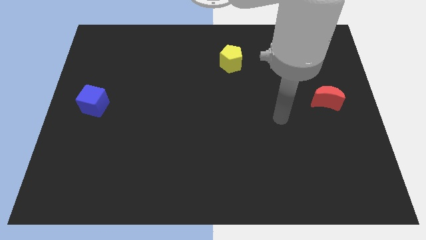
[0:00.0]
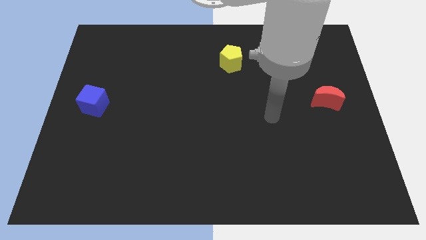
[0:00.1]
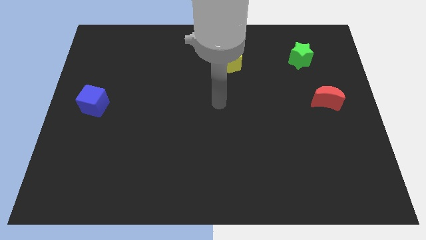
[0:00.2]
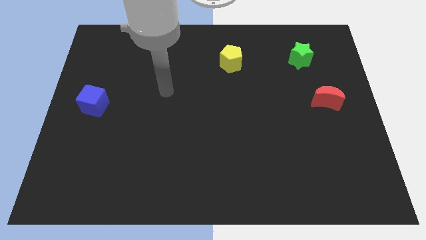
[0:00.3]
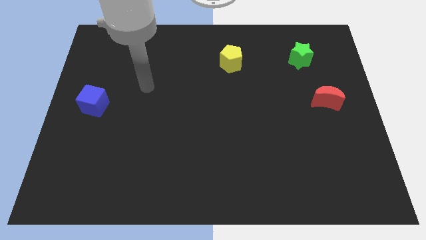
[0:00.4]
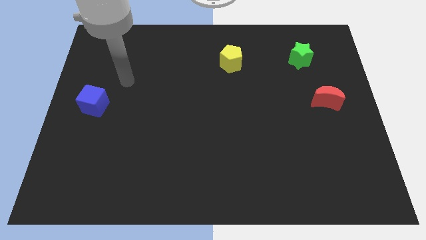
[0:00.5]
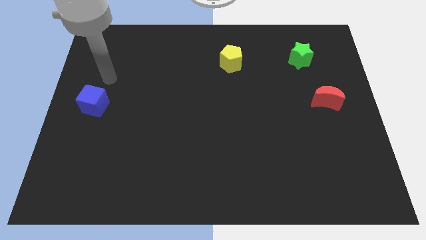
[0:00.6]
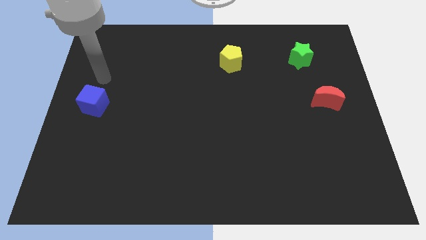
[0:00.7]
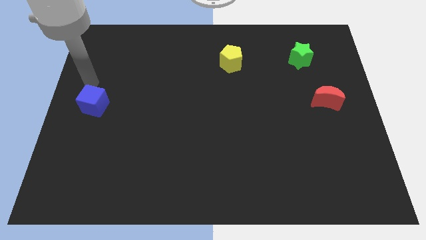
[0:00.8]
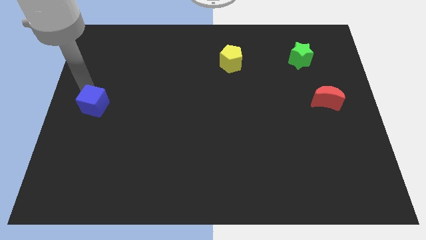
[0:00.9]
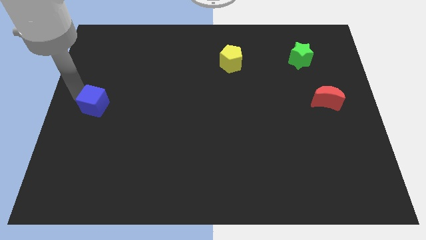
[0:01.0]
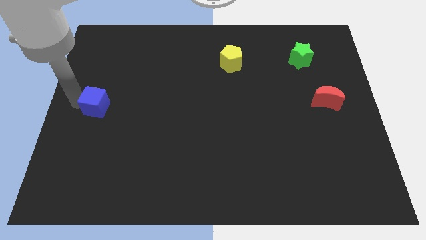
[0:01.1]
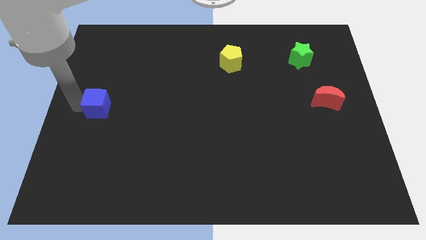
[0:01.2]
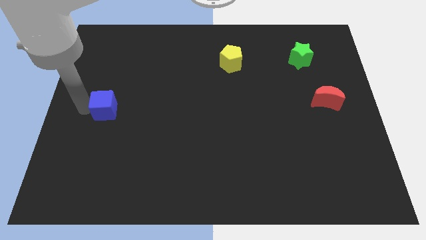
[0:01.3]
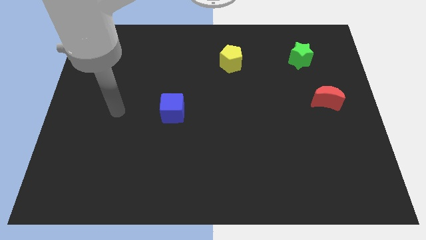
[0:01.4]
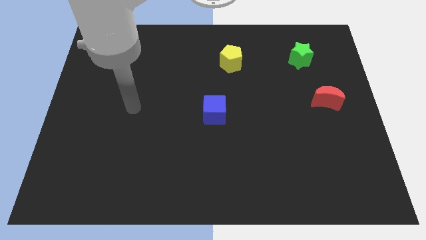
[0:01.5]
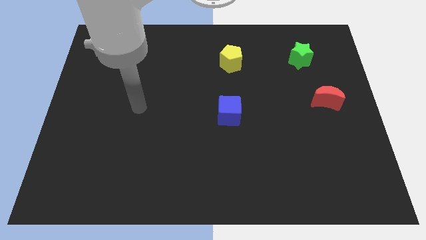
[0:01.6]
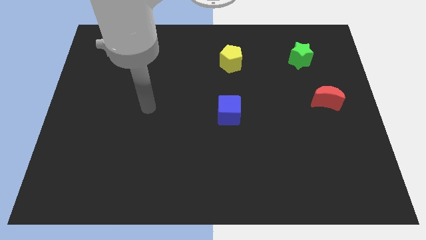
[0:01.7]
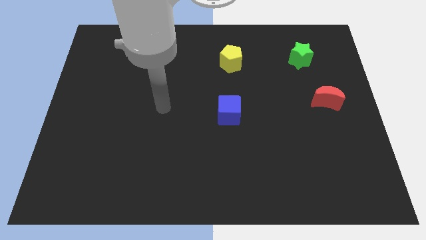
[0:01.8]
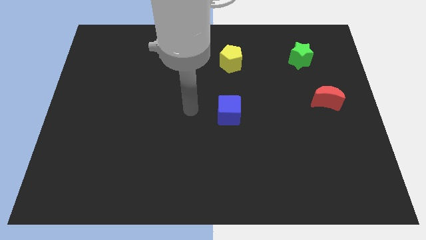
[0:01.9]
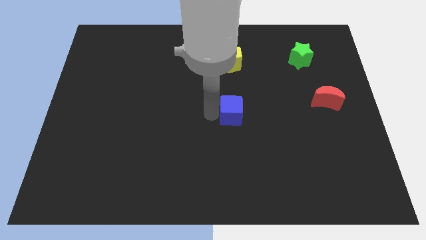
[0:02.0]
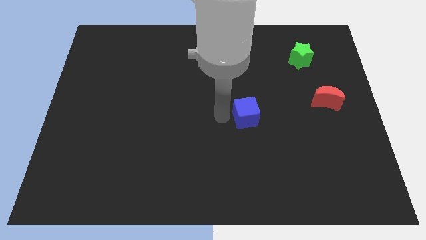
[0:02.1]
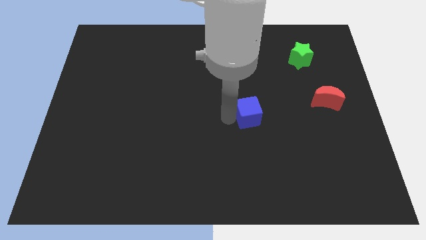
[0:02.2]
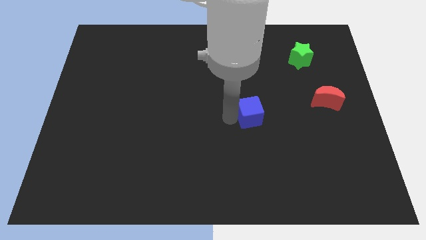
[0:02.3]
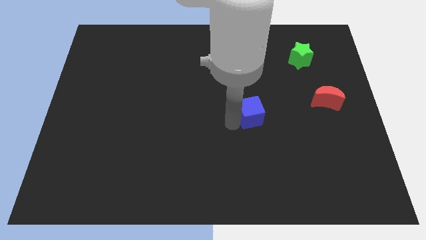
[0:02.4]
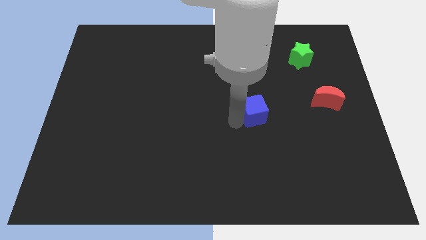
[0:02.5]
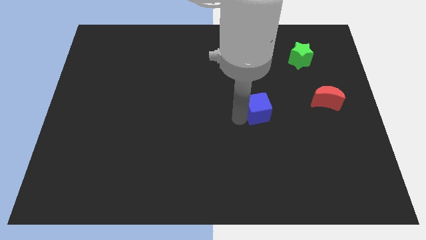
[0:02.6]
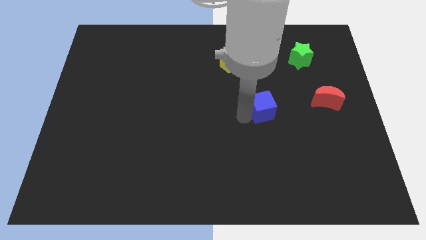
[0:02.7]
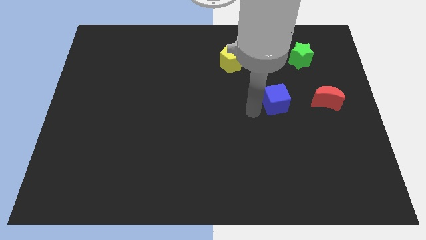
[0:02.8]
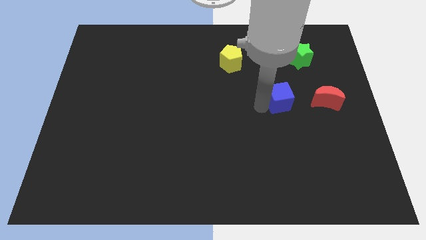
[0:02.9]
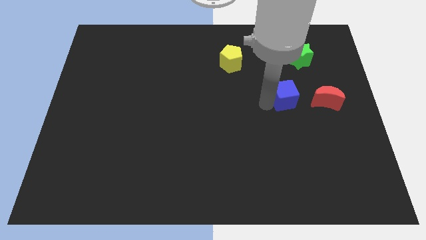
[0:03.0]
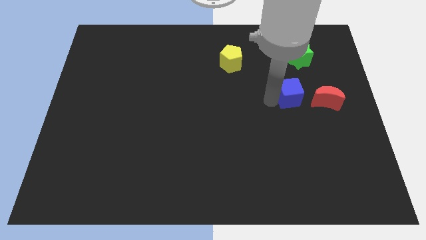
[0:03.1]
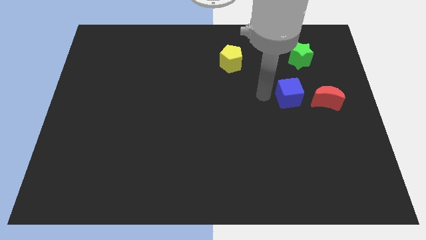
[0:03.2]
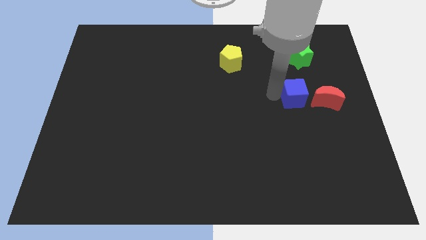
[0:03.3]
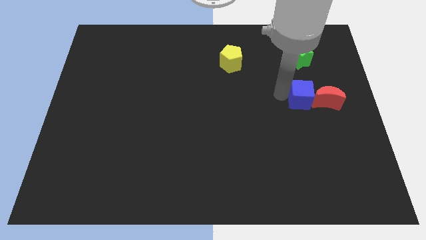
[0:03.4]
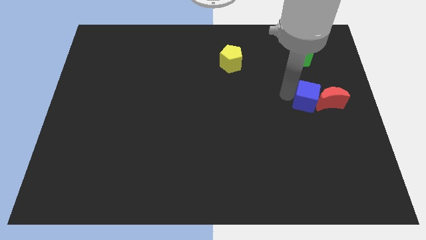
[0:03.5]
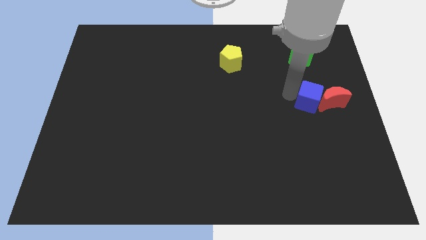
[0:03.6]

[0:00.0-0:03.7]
put the cube towards the red moon

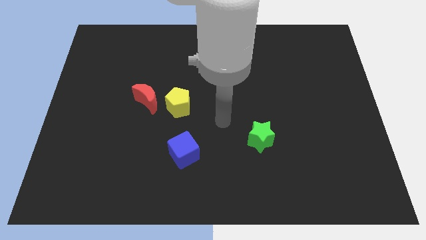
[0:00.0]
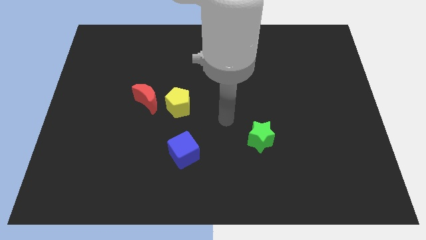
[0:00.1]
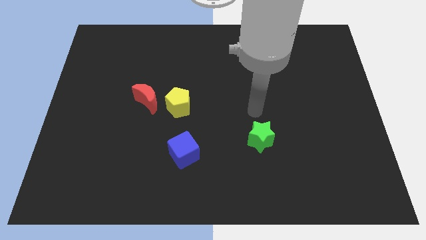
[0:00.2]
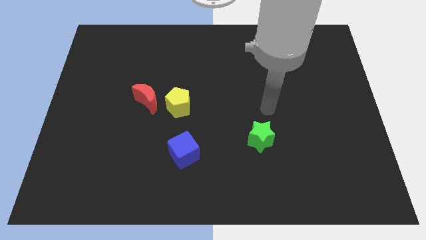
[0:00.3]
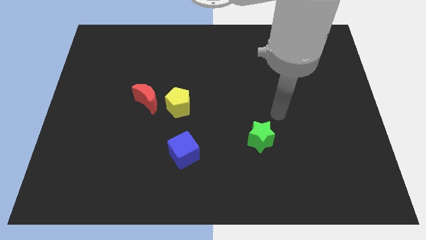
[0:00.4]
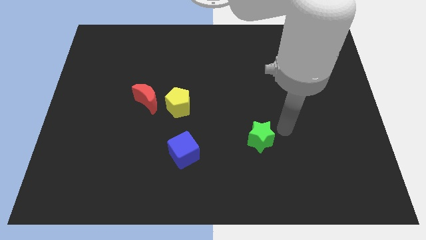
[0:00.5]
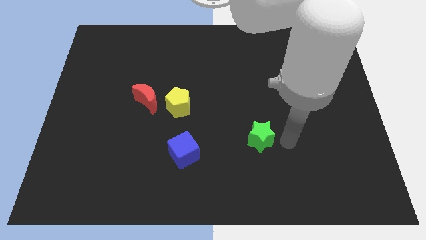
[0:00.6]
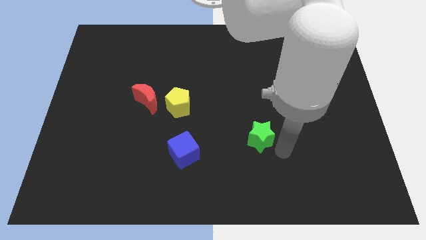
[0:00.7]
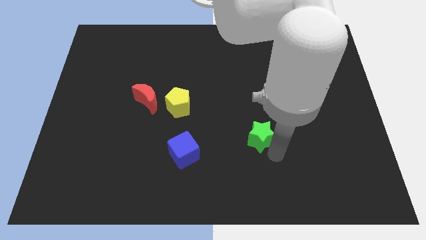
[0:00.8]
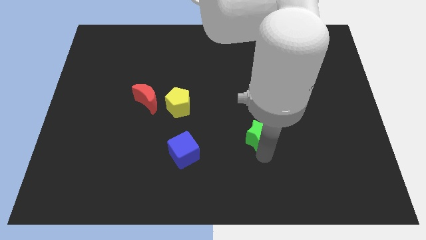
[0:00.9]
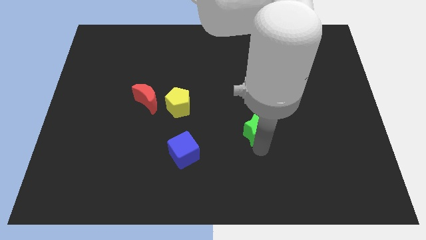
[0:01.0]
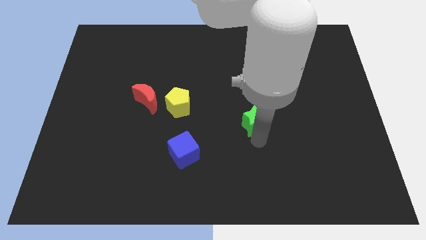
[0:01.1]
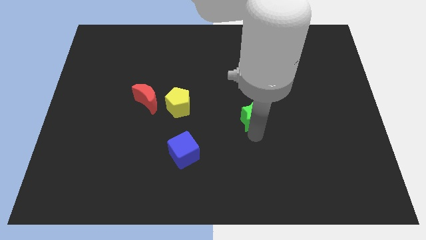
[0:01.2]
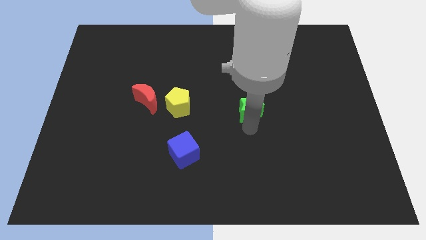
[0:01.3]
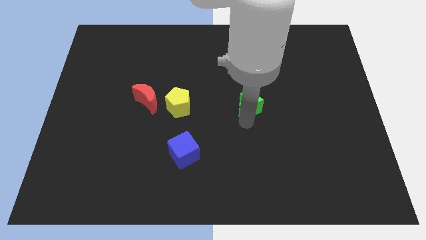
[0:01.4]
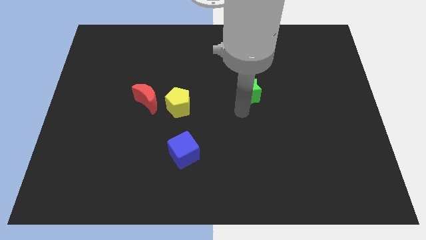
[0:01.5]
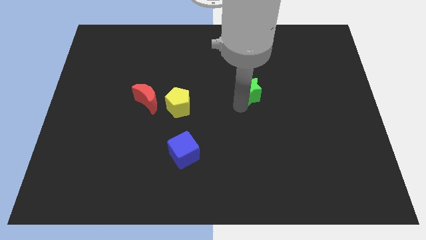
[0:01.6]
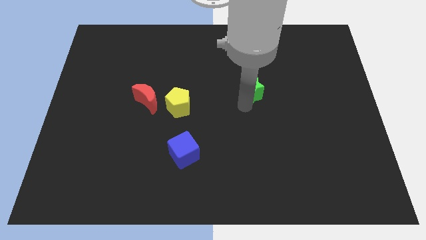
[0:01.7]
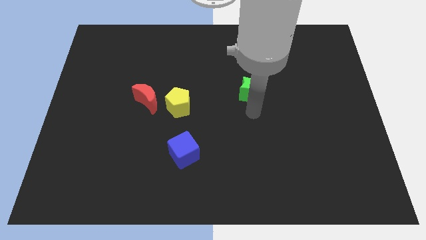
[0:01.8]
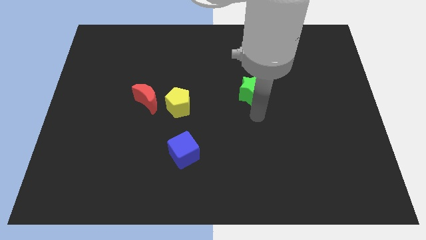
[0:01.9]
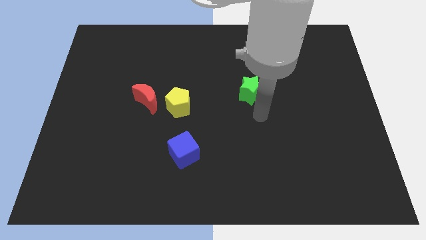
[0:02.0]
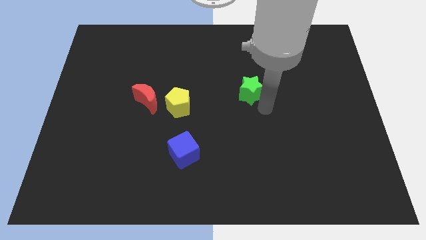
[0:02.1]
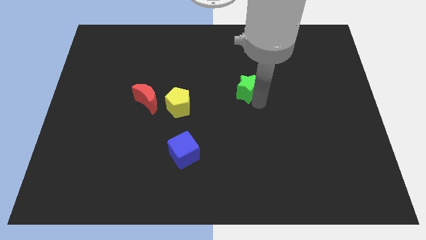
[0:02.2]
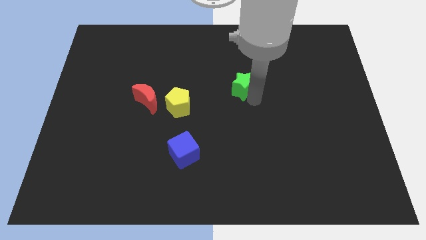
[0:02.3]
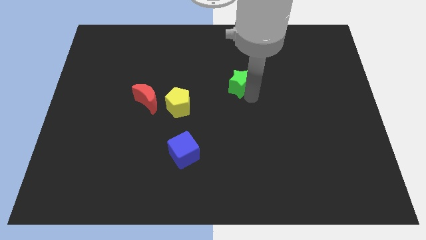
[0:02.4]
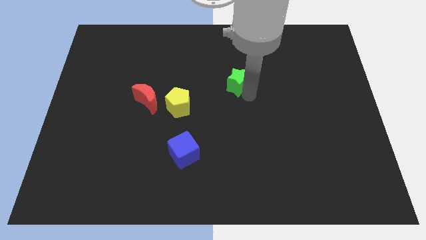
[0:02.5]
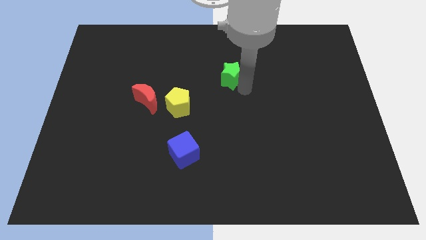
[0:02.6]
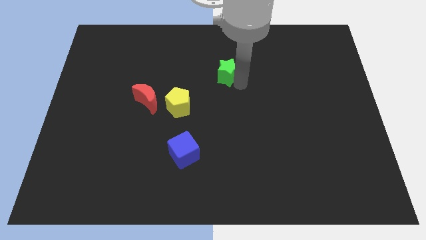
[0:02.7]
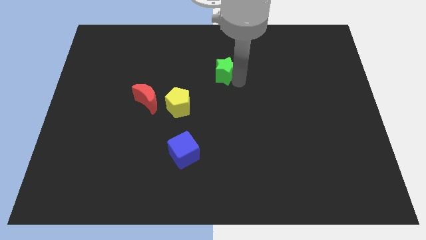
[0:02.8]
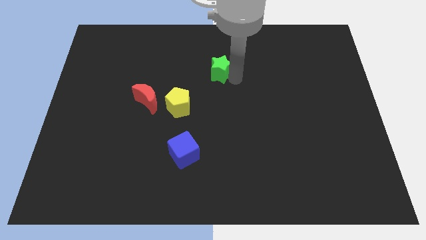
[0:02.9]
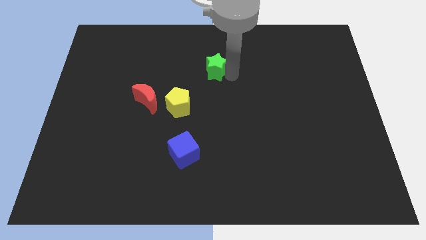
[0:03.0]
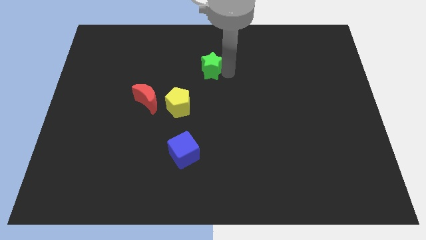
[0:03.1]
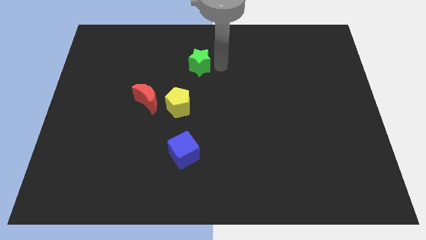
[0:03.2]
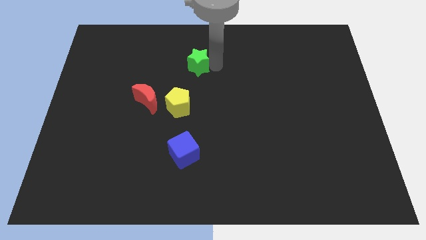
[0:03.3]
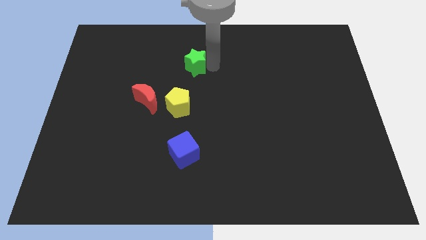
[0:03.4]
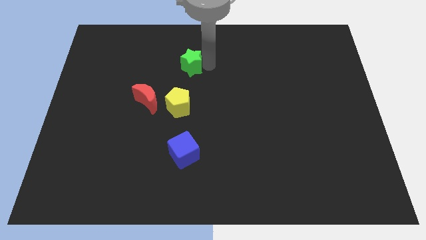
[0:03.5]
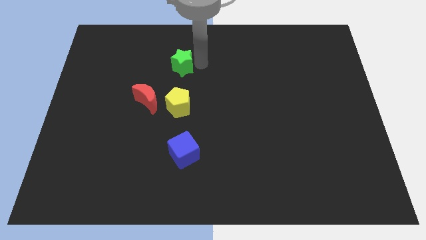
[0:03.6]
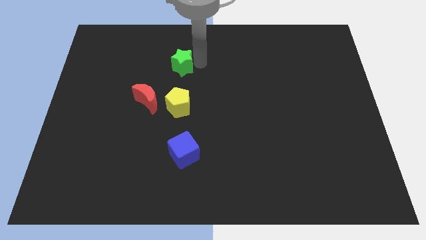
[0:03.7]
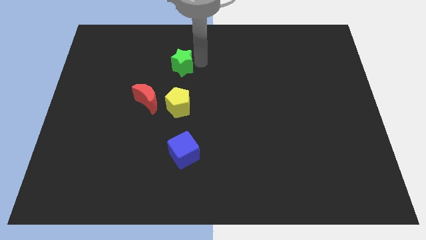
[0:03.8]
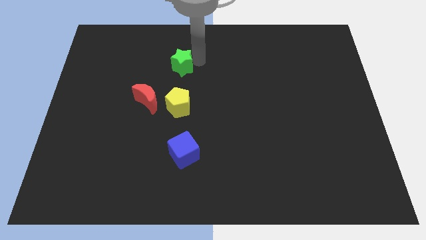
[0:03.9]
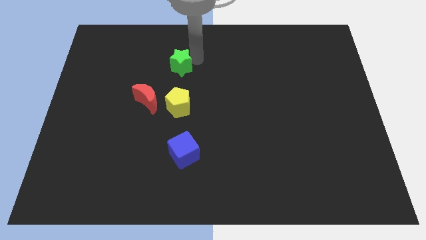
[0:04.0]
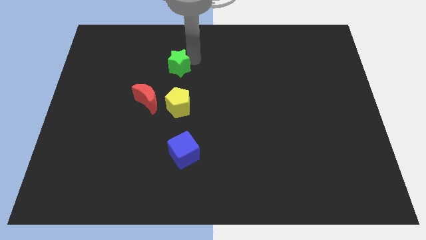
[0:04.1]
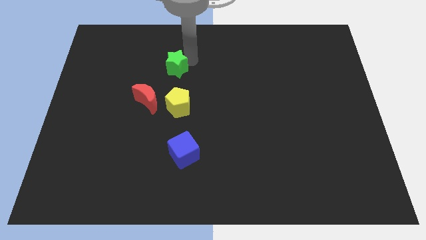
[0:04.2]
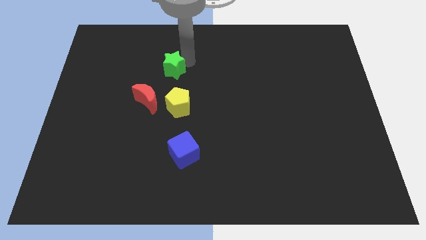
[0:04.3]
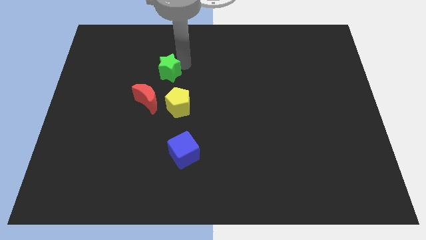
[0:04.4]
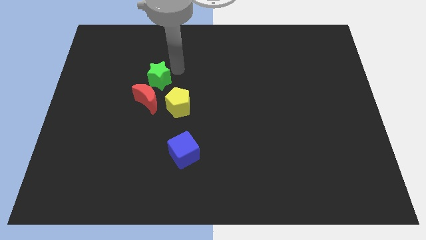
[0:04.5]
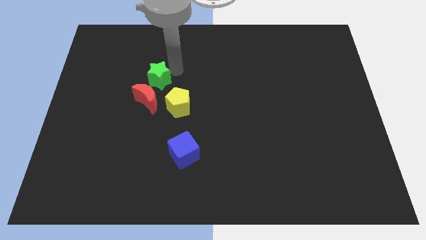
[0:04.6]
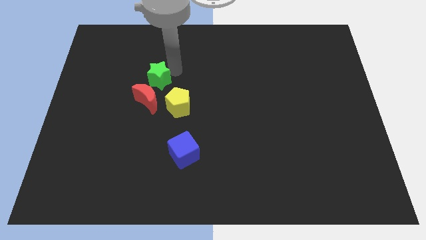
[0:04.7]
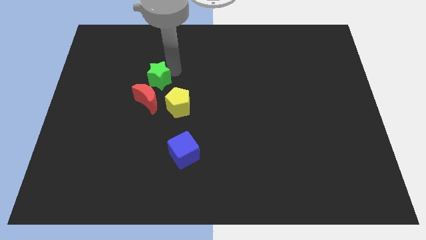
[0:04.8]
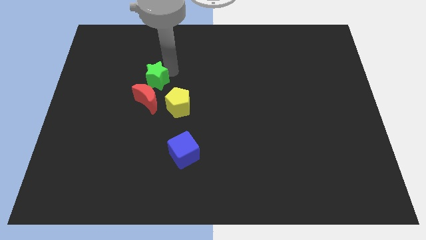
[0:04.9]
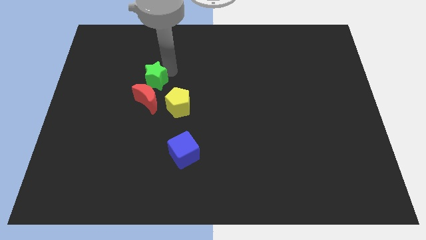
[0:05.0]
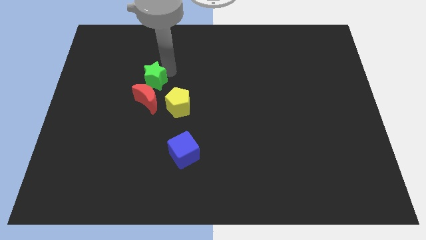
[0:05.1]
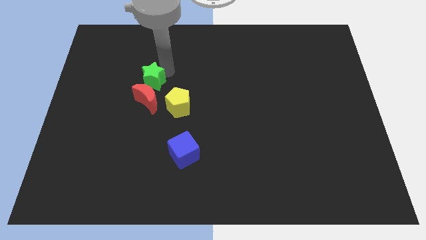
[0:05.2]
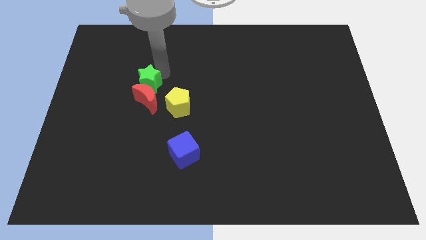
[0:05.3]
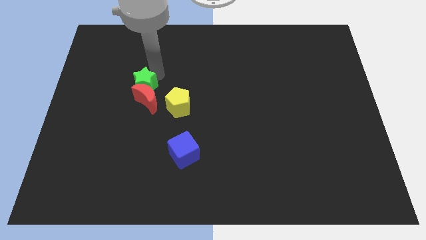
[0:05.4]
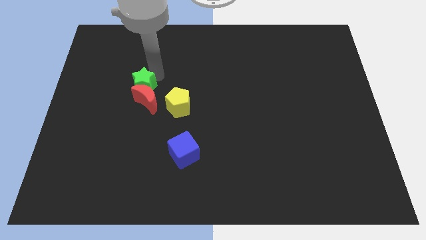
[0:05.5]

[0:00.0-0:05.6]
slide the green star towards the moon
